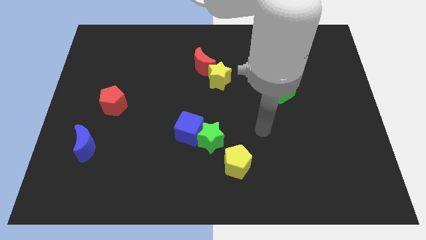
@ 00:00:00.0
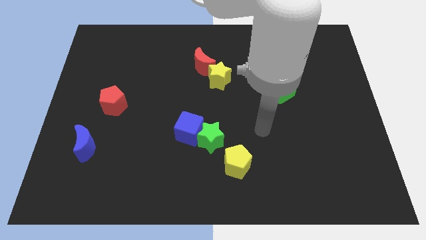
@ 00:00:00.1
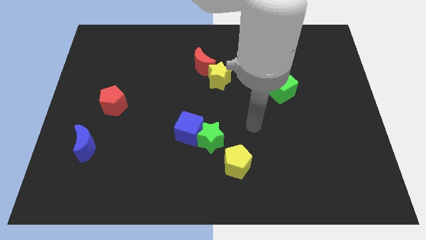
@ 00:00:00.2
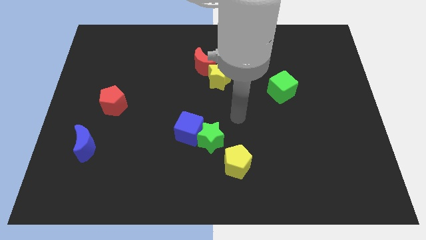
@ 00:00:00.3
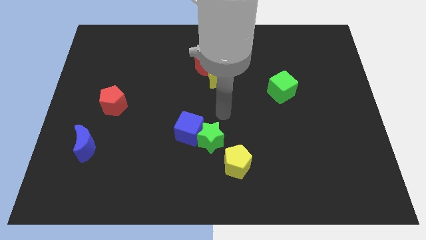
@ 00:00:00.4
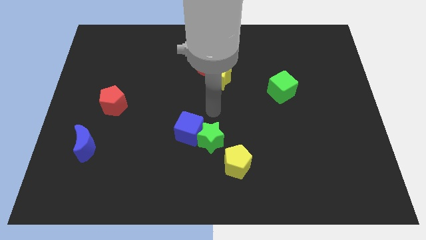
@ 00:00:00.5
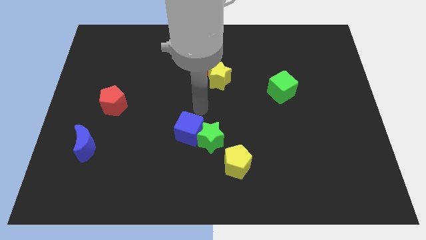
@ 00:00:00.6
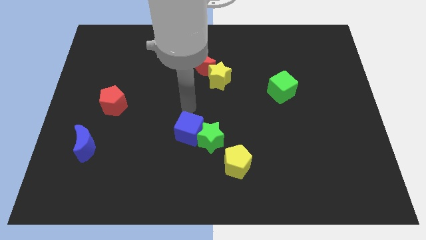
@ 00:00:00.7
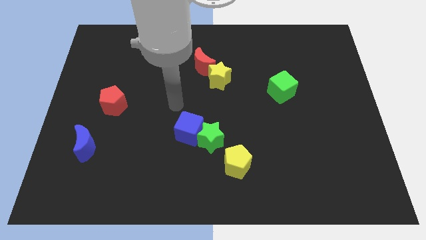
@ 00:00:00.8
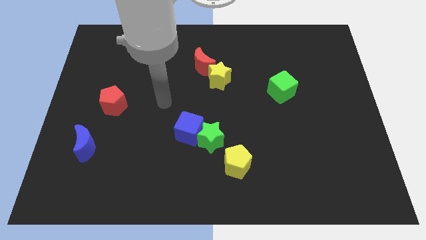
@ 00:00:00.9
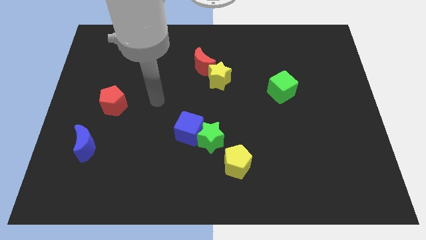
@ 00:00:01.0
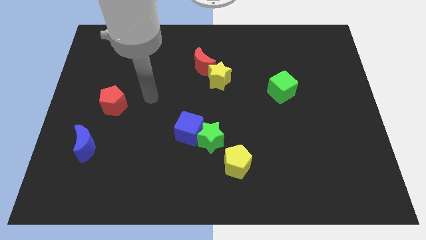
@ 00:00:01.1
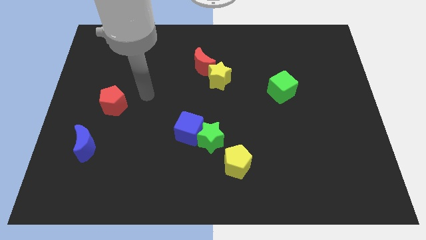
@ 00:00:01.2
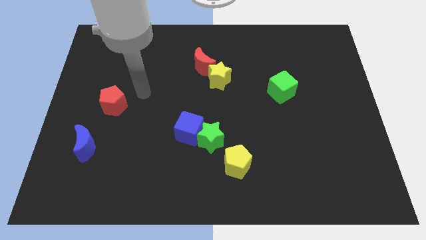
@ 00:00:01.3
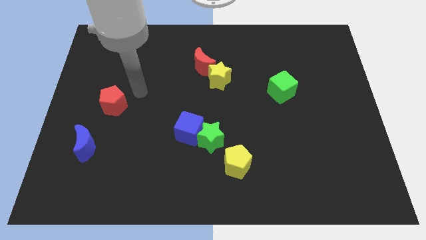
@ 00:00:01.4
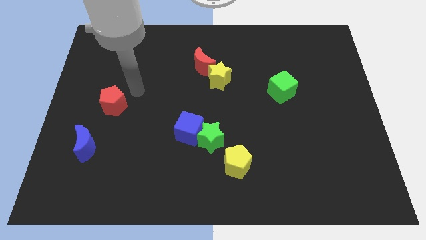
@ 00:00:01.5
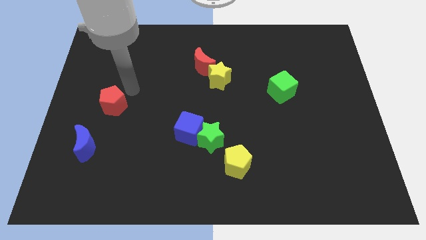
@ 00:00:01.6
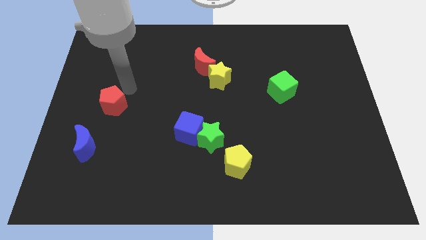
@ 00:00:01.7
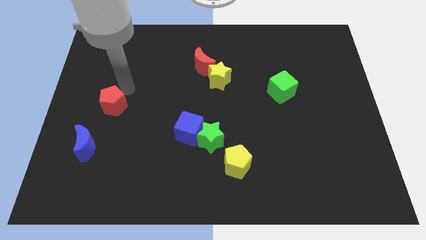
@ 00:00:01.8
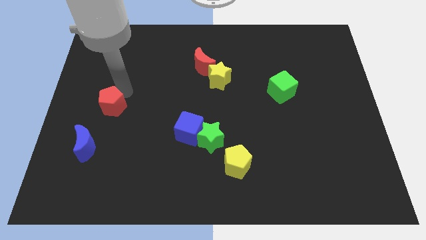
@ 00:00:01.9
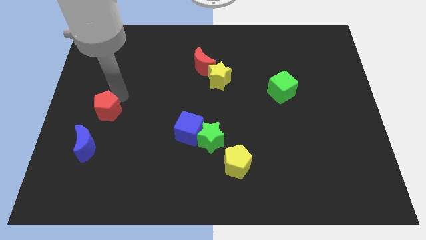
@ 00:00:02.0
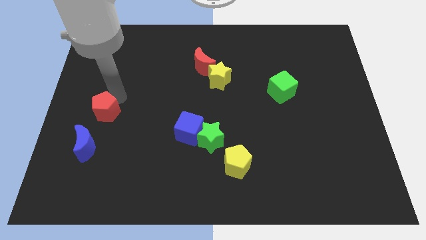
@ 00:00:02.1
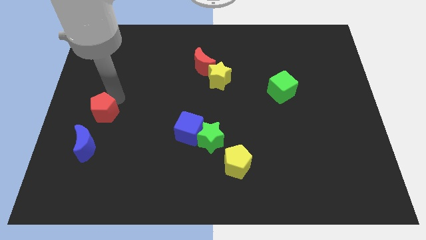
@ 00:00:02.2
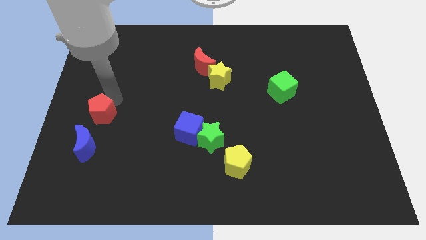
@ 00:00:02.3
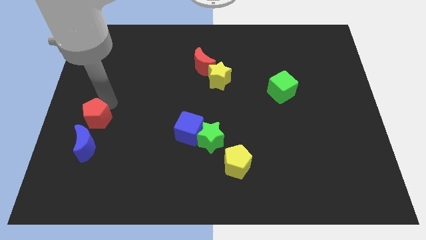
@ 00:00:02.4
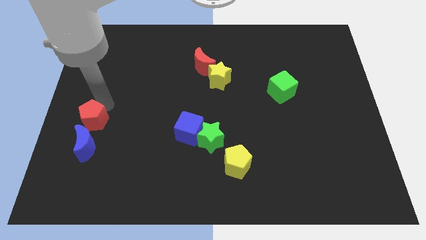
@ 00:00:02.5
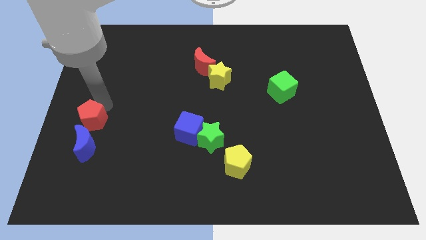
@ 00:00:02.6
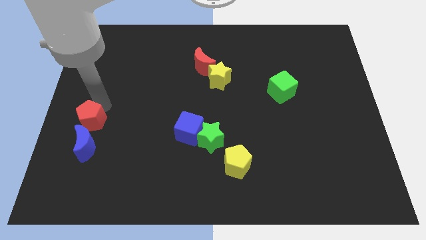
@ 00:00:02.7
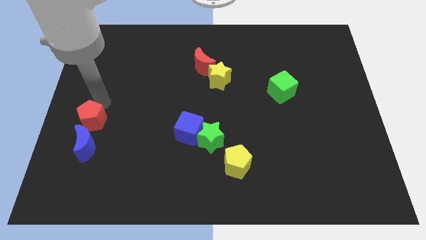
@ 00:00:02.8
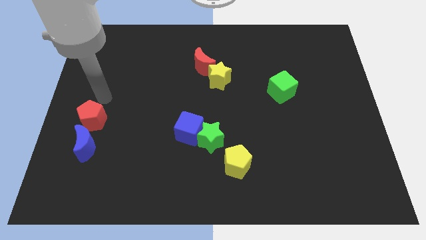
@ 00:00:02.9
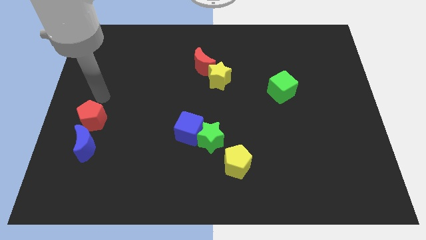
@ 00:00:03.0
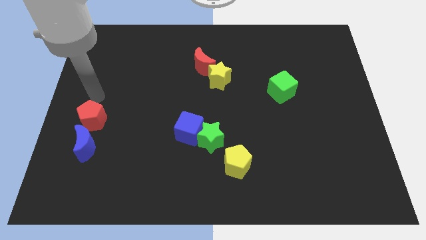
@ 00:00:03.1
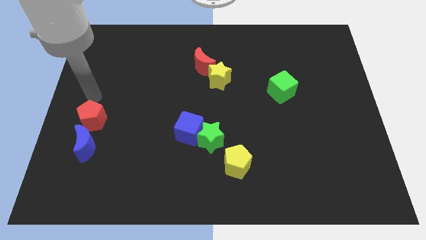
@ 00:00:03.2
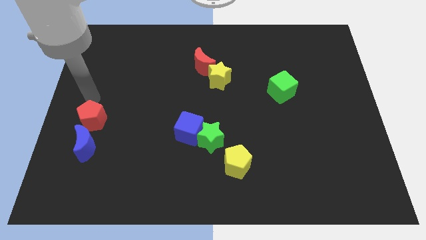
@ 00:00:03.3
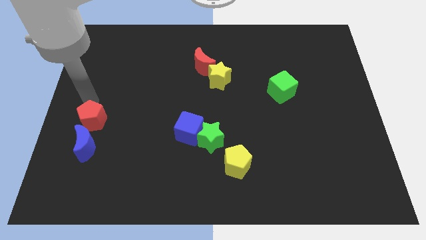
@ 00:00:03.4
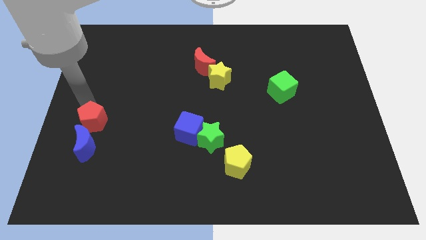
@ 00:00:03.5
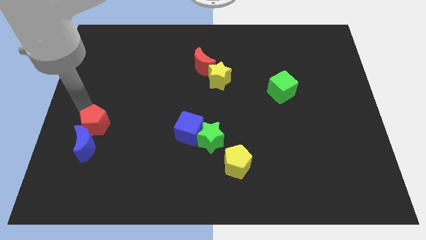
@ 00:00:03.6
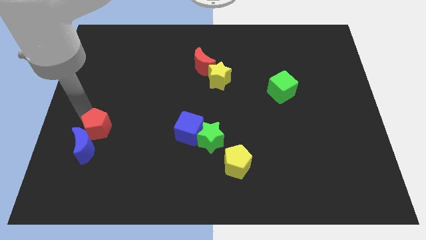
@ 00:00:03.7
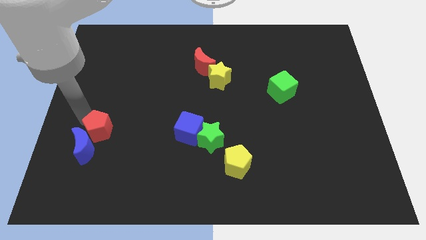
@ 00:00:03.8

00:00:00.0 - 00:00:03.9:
move the red pentagon close to the blue moon

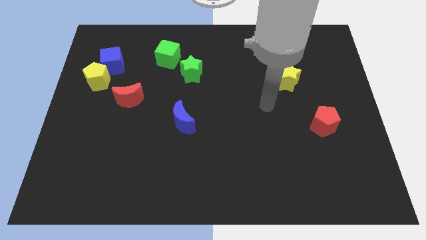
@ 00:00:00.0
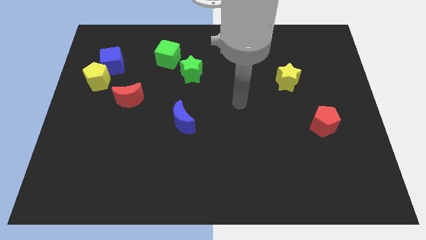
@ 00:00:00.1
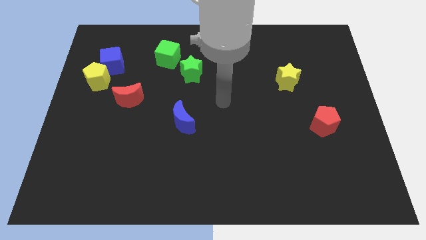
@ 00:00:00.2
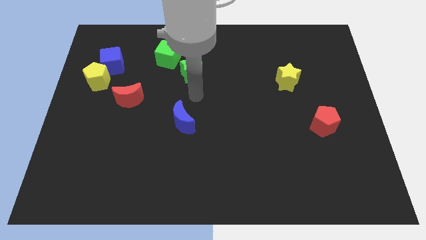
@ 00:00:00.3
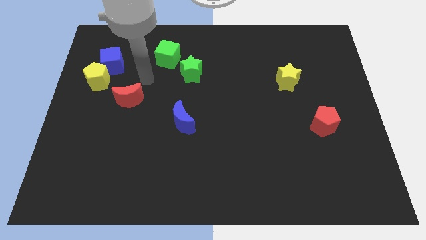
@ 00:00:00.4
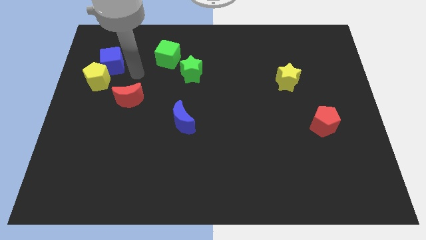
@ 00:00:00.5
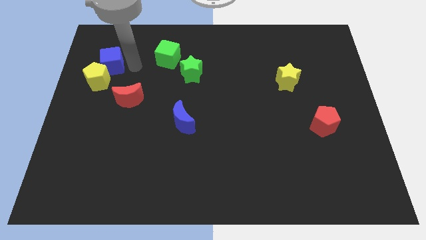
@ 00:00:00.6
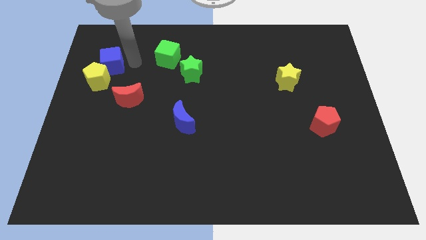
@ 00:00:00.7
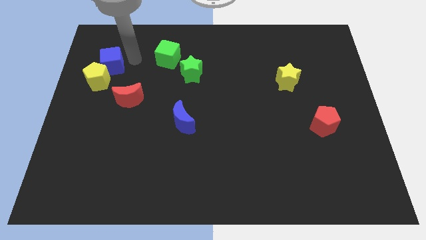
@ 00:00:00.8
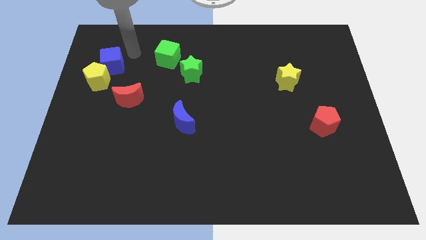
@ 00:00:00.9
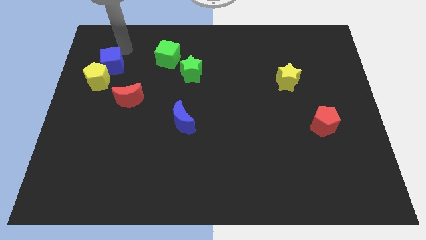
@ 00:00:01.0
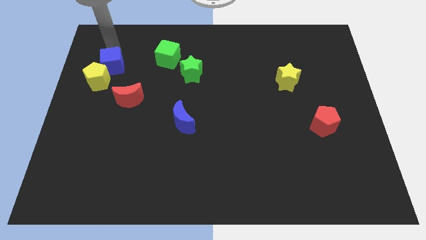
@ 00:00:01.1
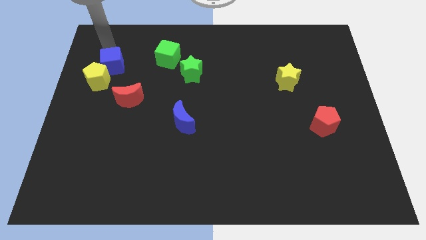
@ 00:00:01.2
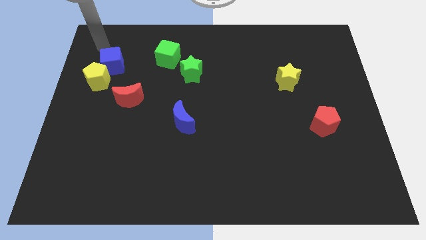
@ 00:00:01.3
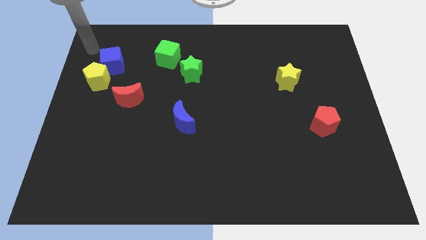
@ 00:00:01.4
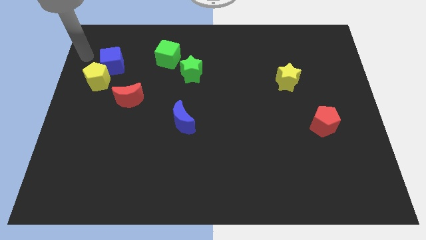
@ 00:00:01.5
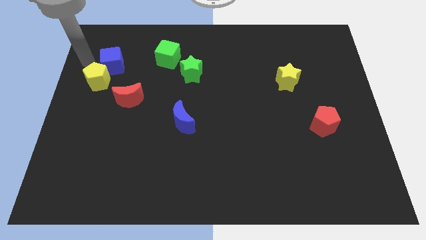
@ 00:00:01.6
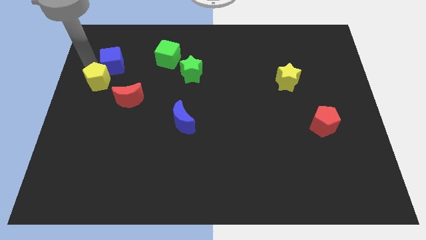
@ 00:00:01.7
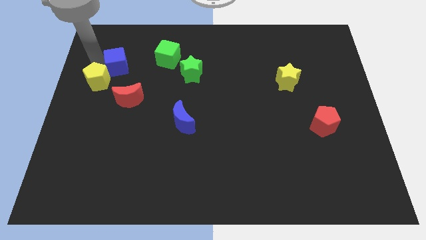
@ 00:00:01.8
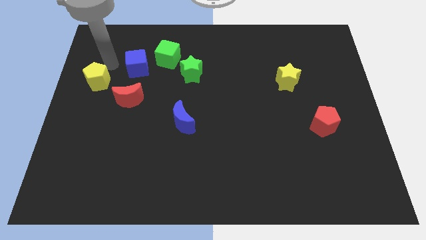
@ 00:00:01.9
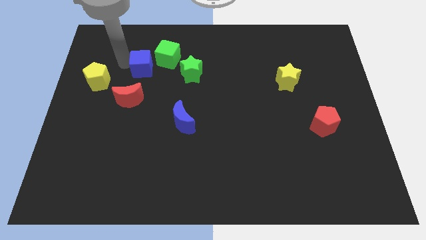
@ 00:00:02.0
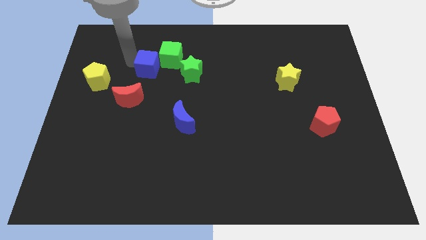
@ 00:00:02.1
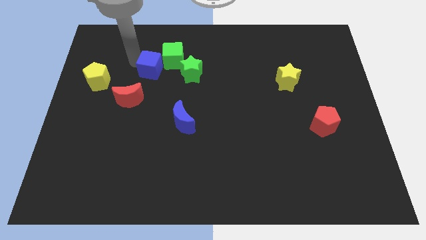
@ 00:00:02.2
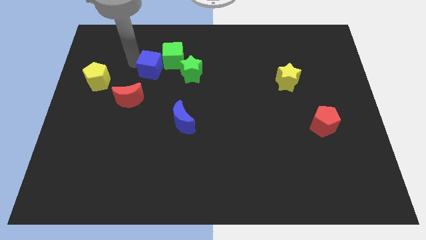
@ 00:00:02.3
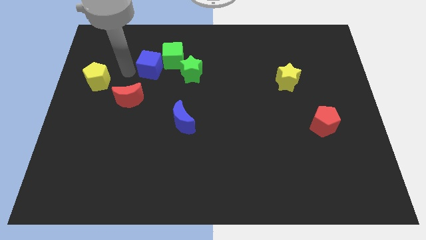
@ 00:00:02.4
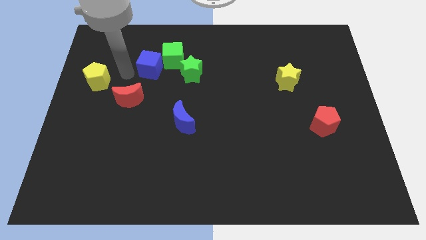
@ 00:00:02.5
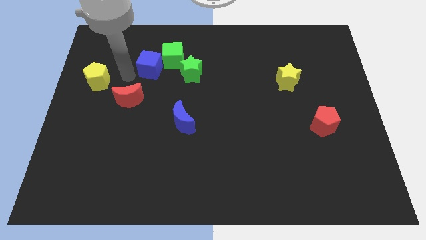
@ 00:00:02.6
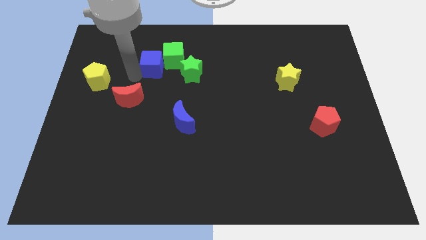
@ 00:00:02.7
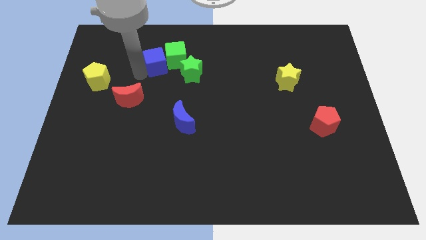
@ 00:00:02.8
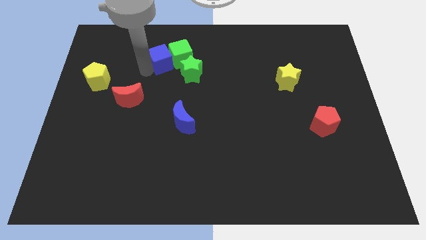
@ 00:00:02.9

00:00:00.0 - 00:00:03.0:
push the blue cube to the green cube

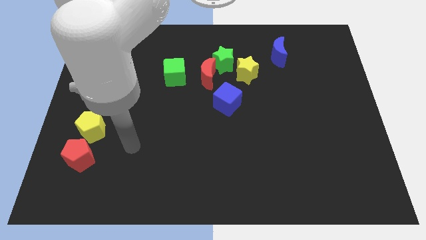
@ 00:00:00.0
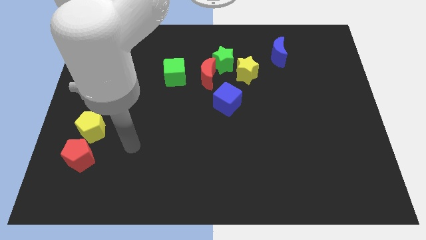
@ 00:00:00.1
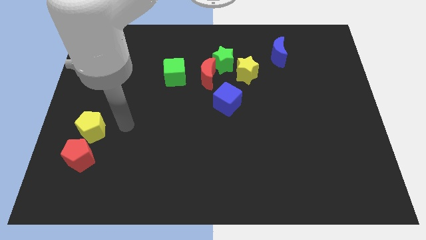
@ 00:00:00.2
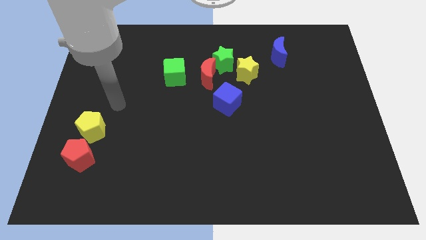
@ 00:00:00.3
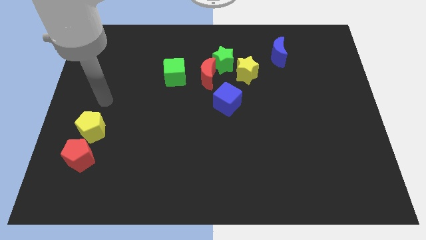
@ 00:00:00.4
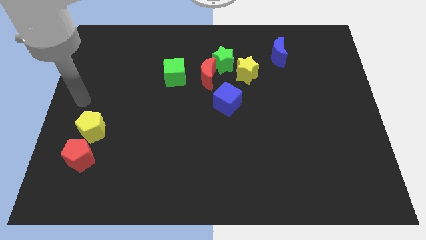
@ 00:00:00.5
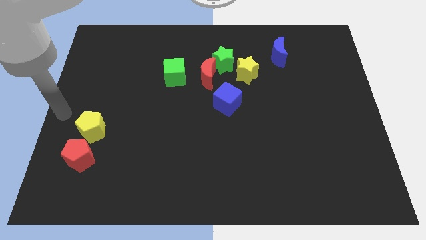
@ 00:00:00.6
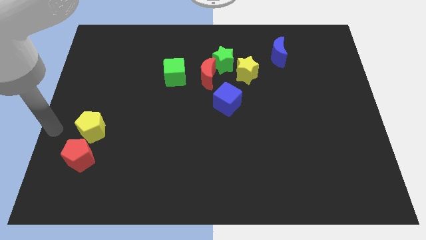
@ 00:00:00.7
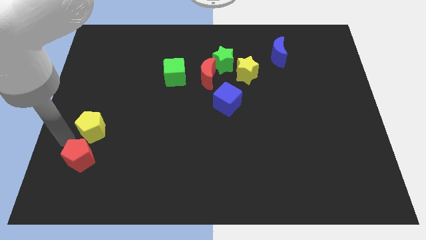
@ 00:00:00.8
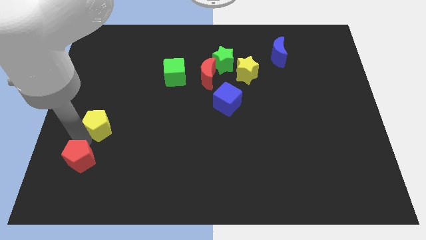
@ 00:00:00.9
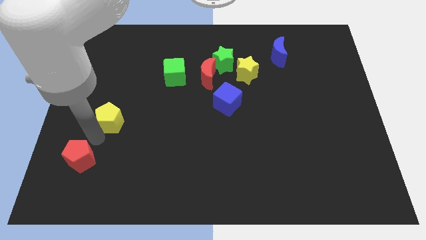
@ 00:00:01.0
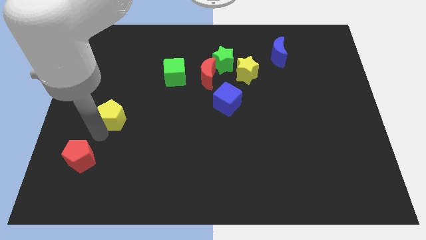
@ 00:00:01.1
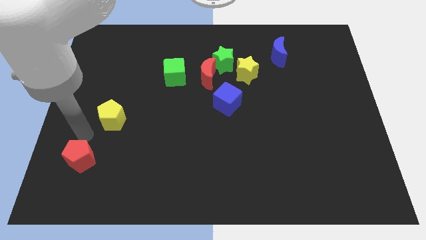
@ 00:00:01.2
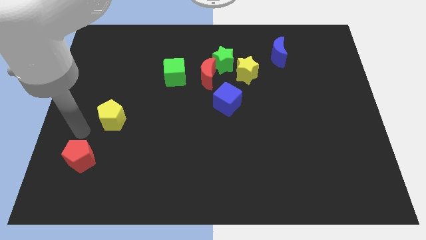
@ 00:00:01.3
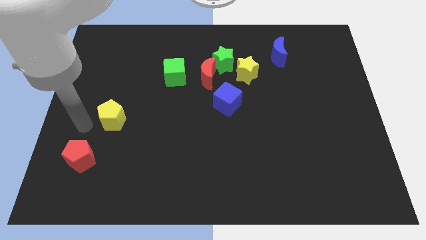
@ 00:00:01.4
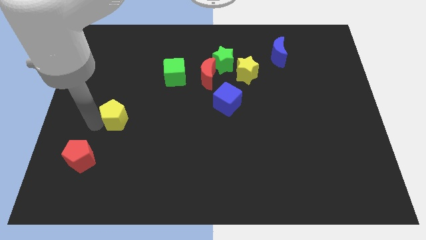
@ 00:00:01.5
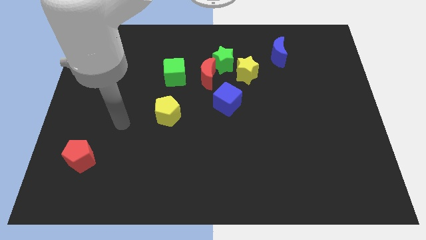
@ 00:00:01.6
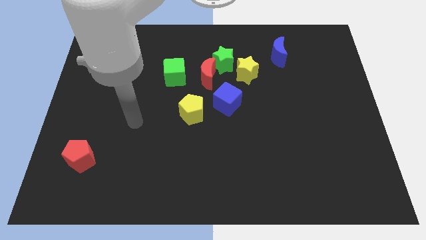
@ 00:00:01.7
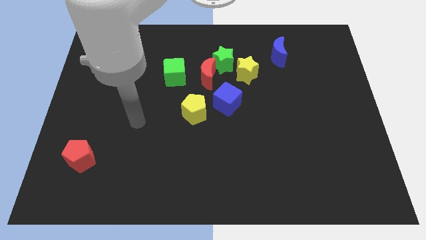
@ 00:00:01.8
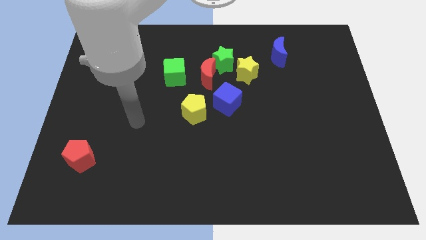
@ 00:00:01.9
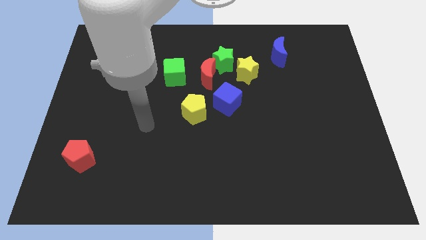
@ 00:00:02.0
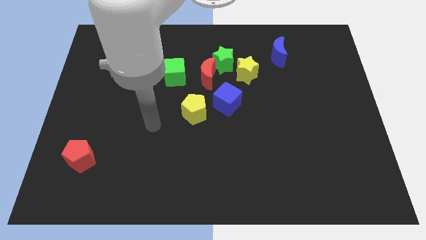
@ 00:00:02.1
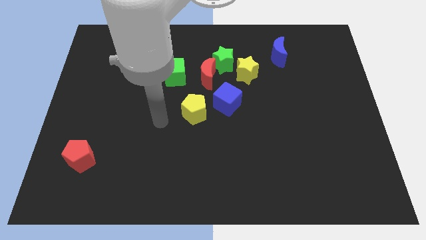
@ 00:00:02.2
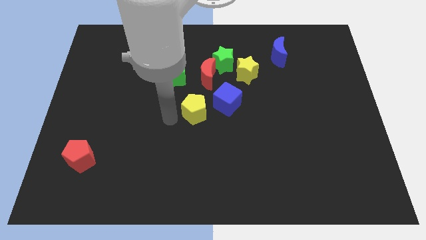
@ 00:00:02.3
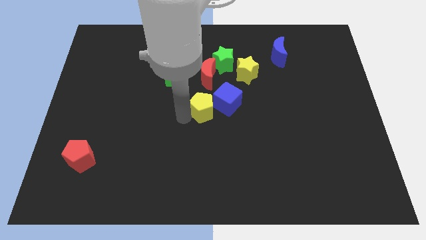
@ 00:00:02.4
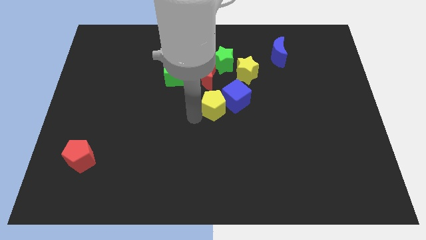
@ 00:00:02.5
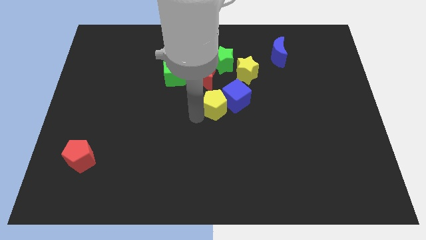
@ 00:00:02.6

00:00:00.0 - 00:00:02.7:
push the yellow pentagon close to the blue cube
